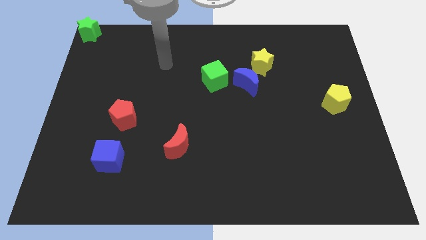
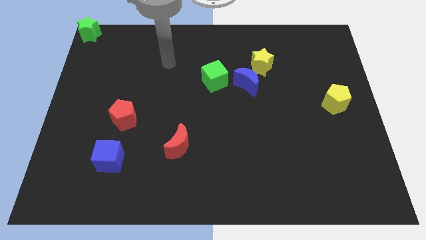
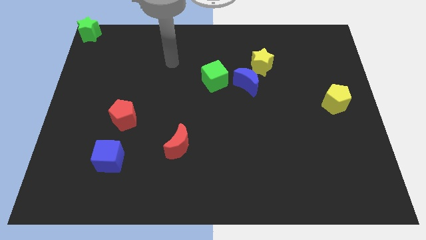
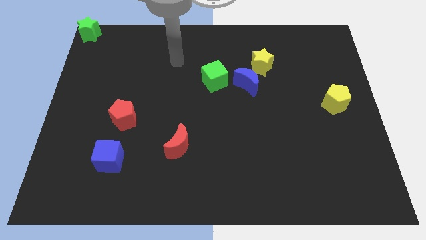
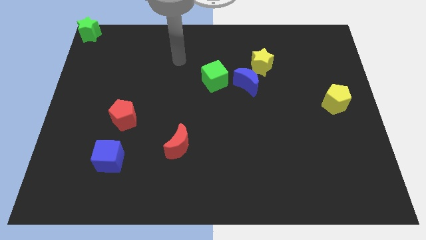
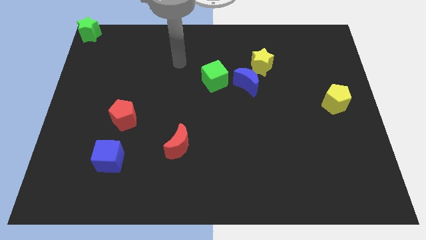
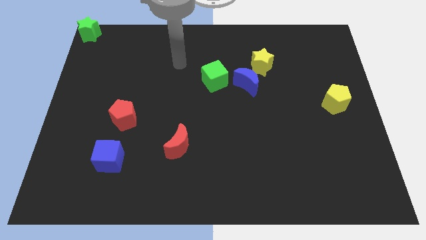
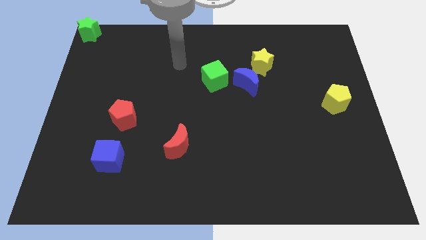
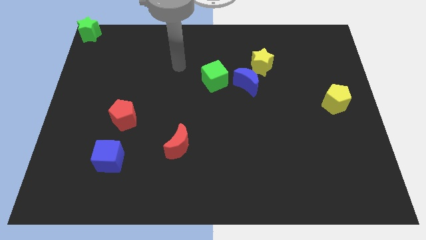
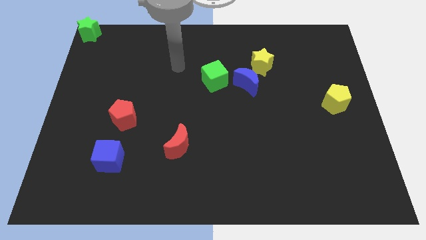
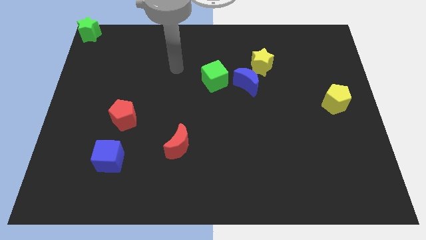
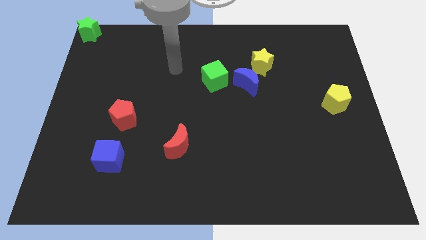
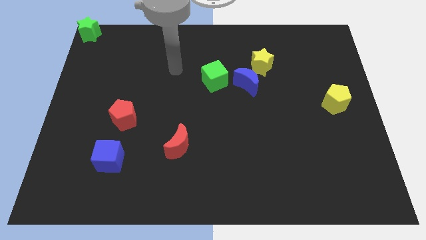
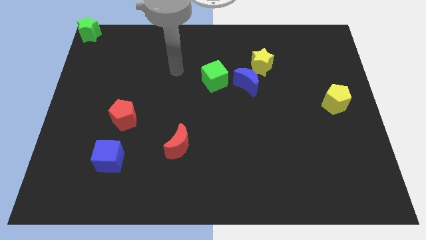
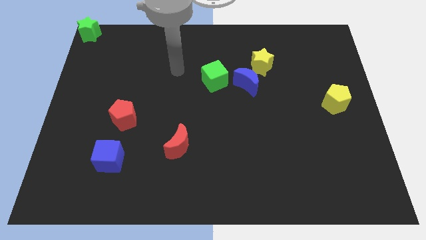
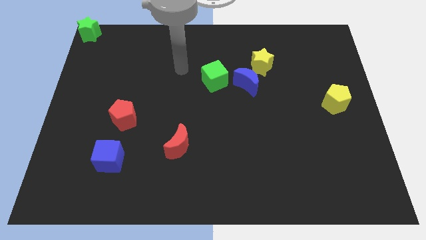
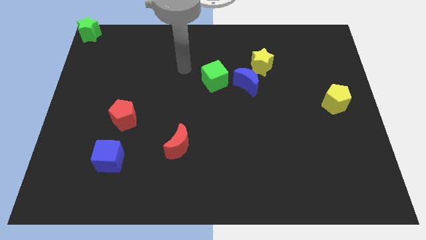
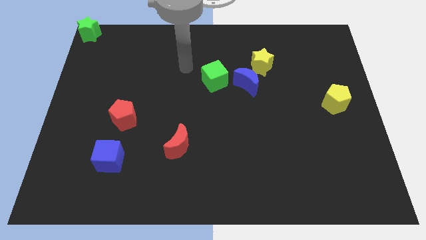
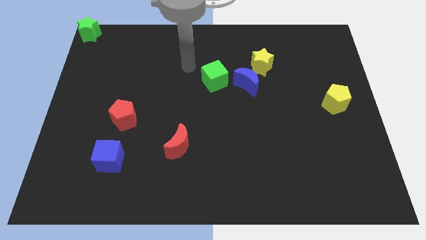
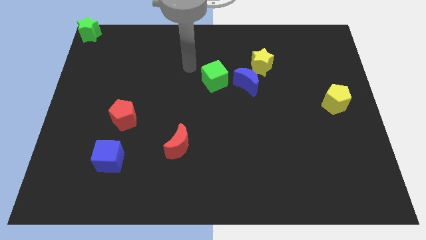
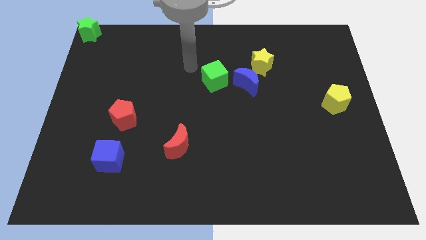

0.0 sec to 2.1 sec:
move your arm towards the green cube

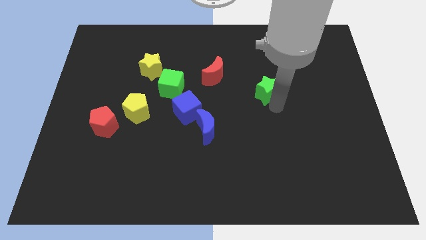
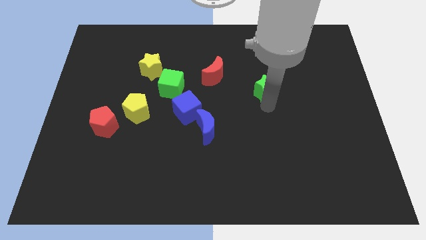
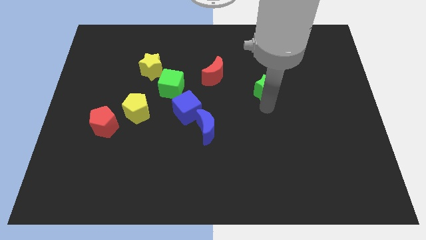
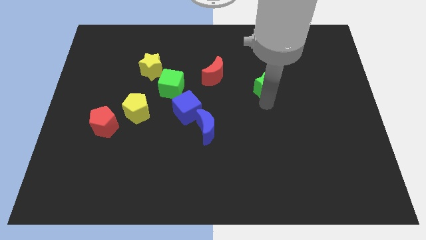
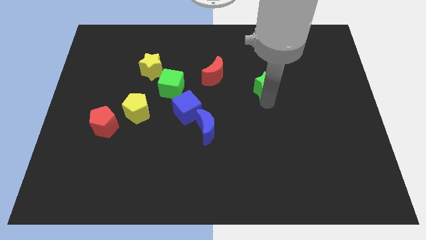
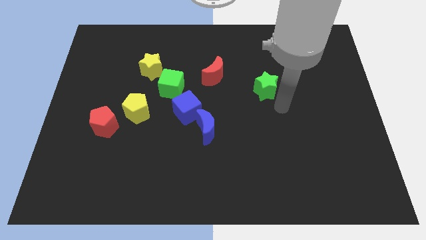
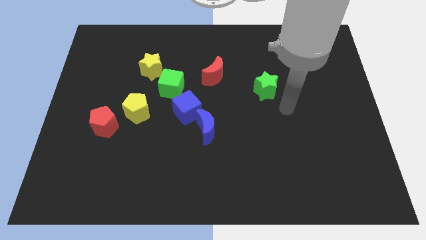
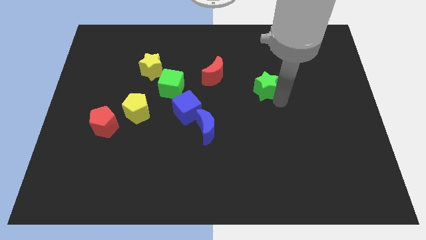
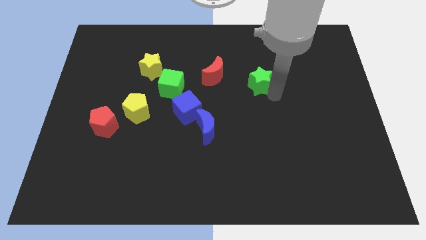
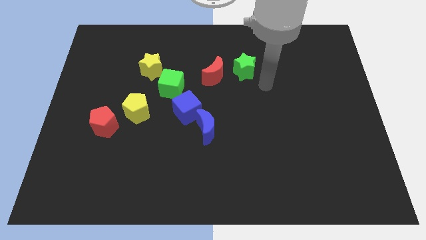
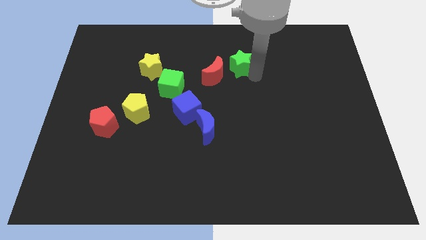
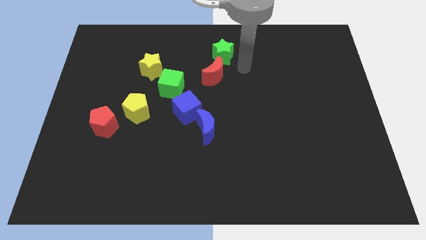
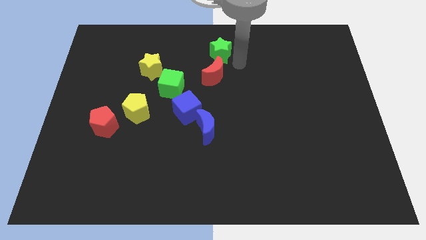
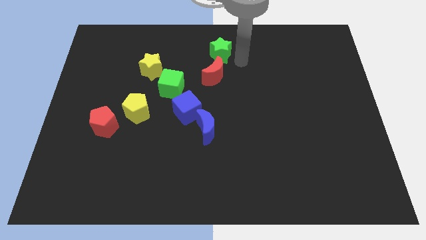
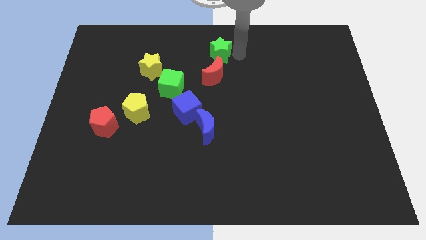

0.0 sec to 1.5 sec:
place the green star slightly below the top center of the board

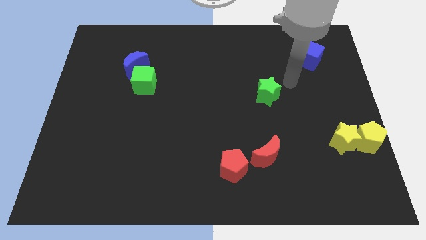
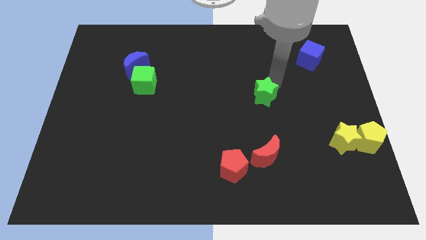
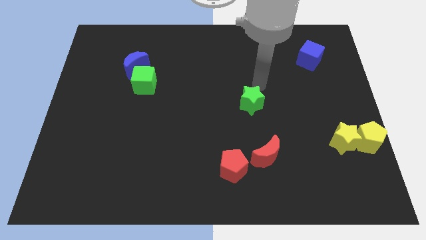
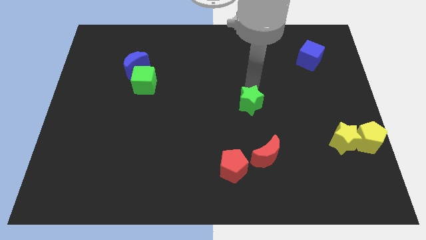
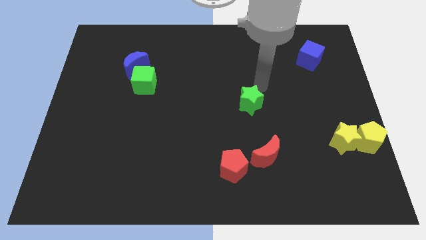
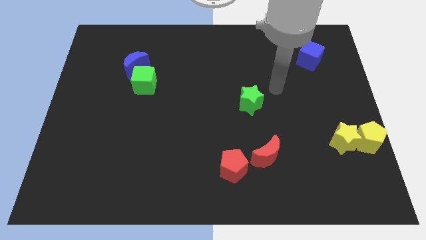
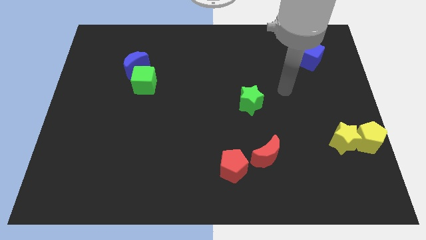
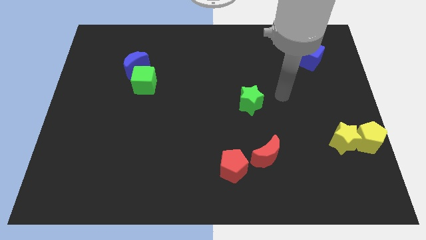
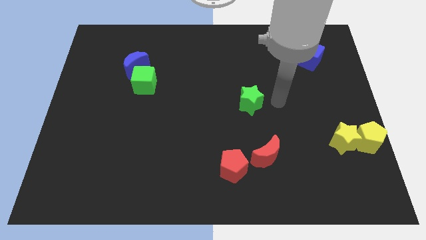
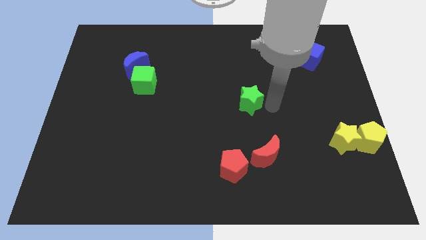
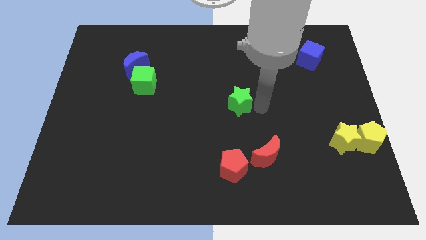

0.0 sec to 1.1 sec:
push the greens tar above red blocks

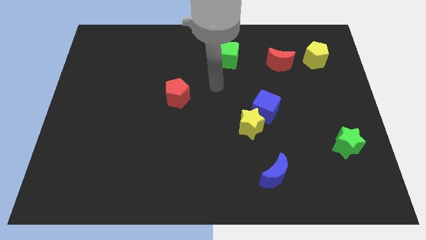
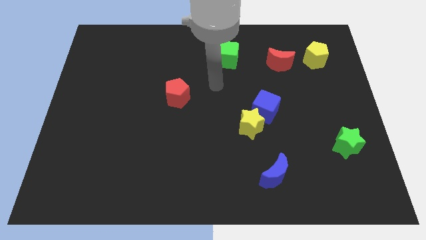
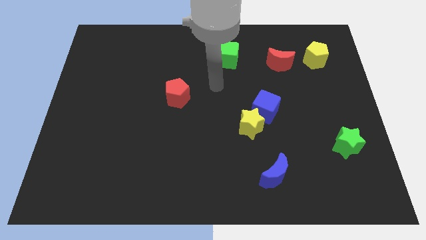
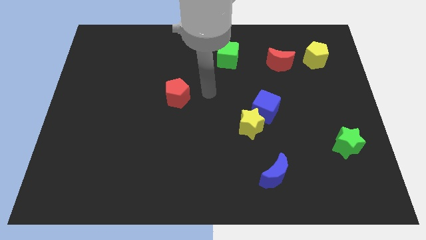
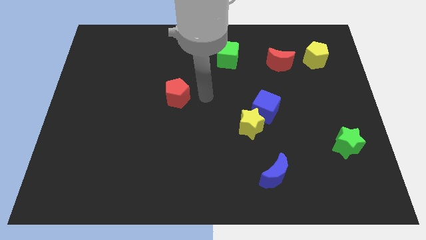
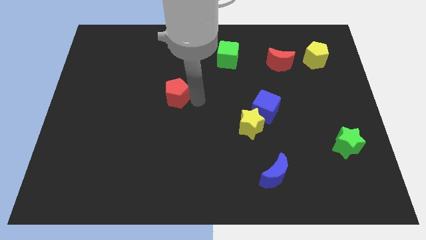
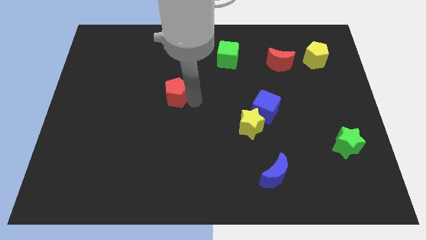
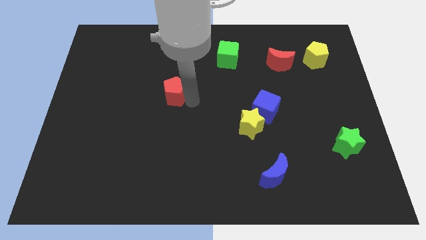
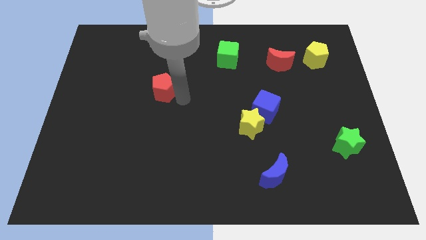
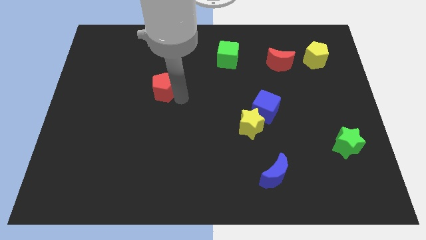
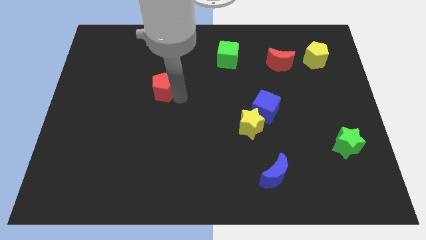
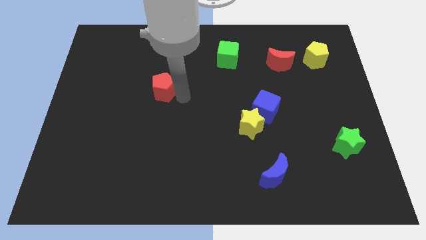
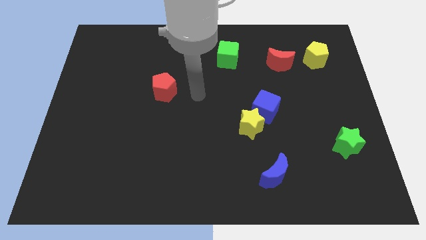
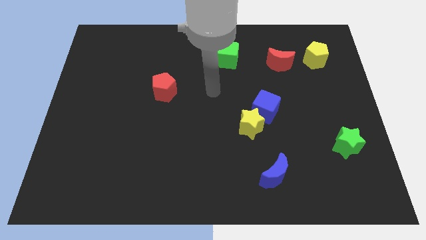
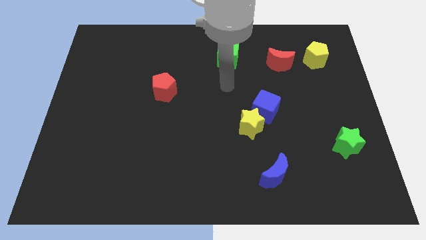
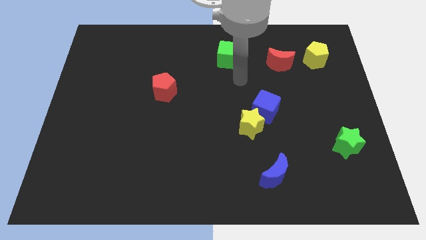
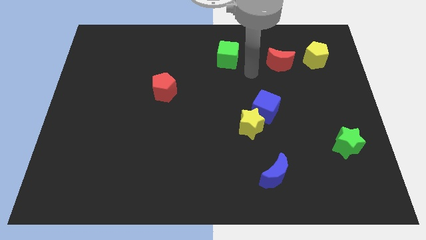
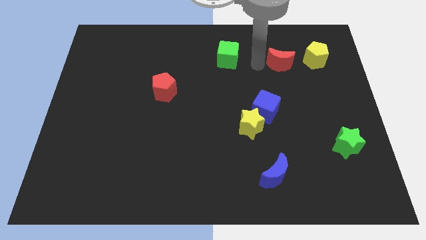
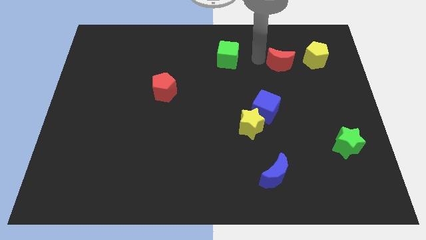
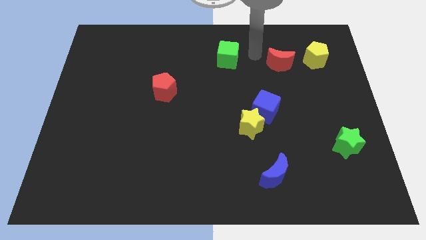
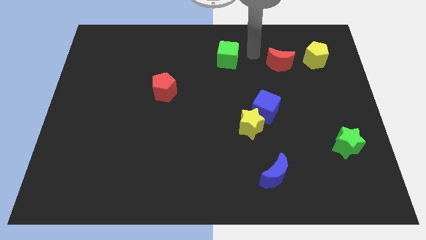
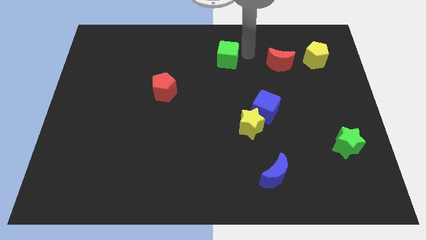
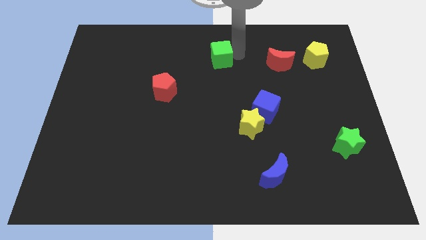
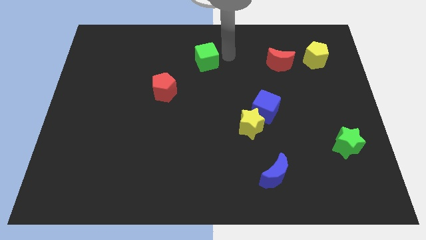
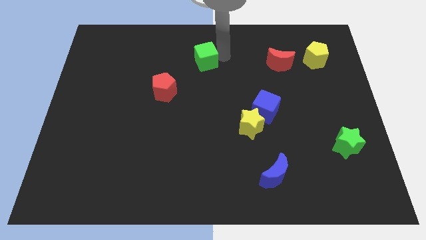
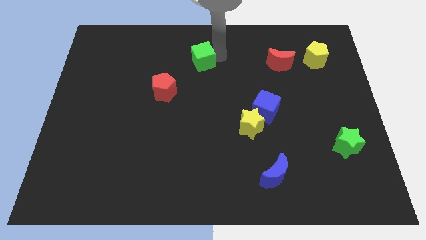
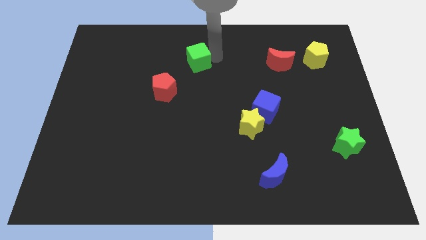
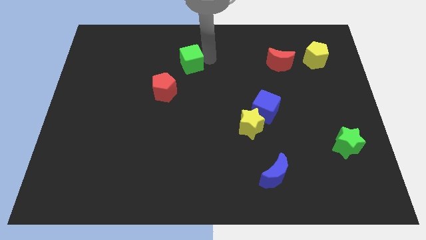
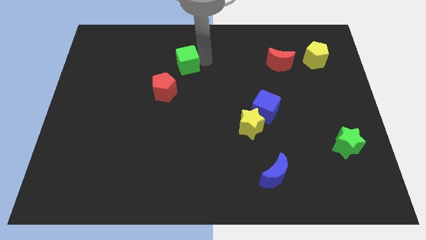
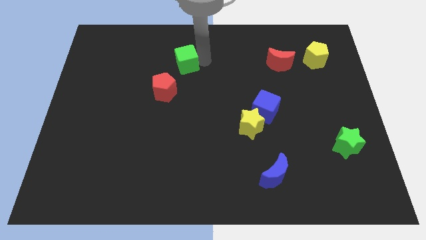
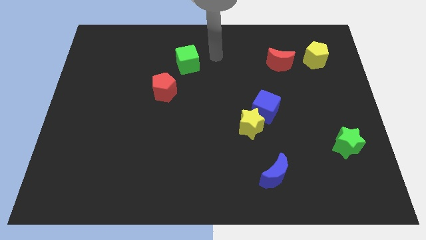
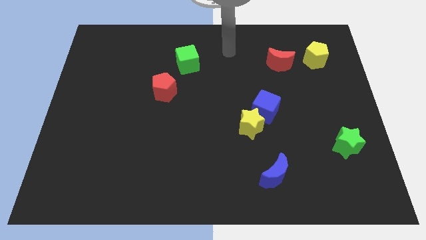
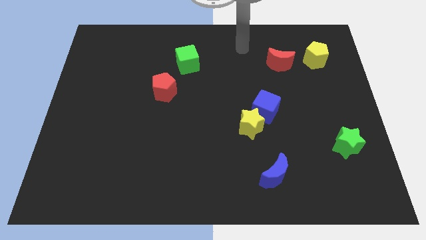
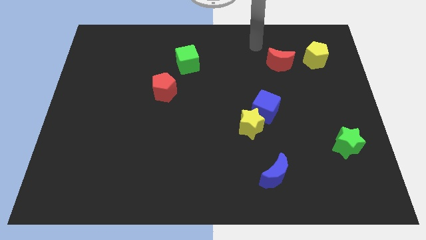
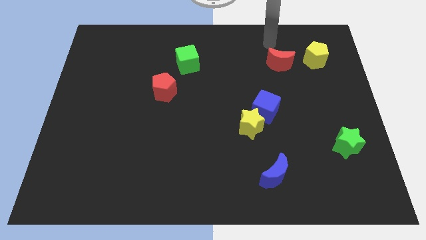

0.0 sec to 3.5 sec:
move the green cube towards the red pentagon

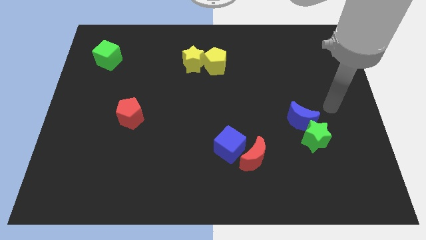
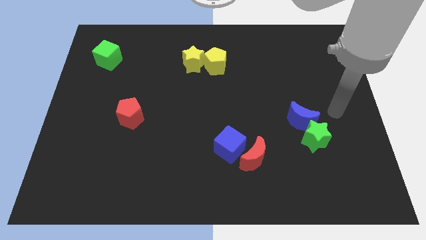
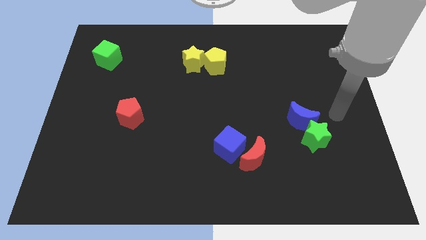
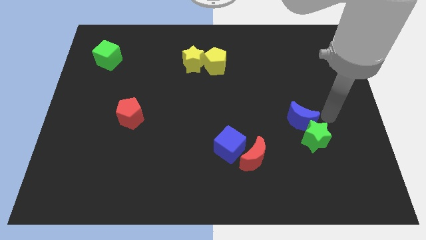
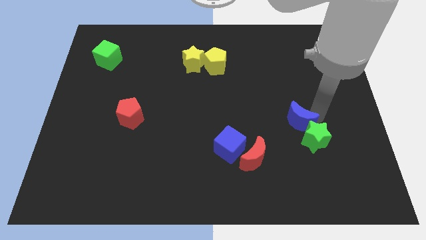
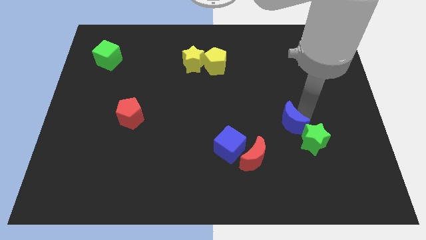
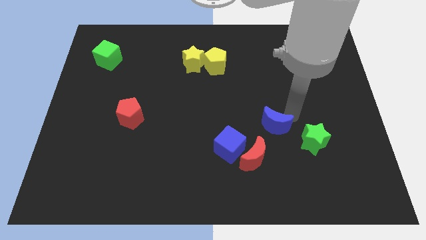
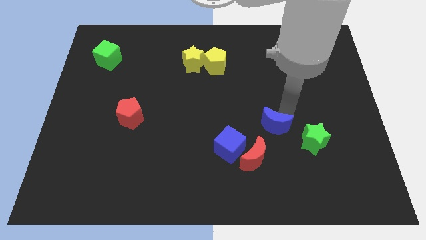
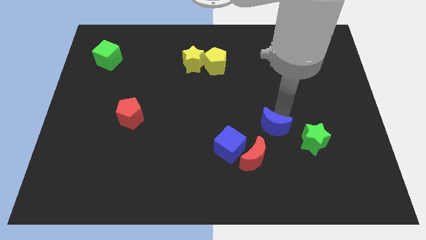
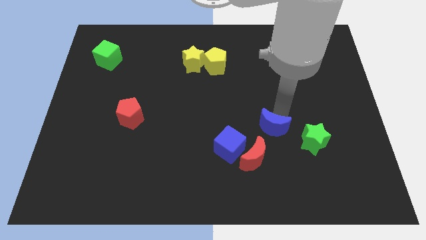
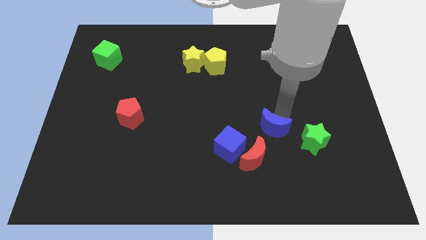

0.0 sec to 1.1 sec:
separate blue crescent from green star
